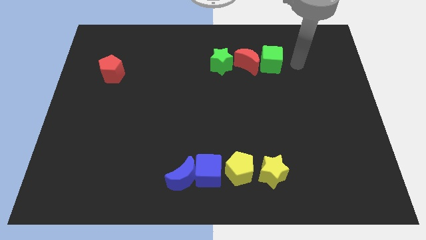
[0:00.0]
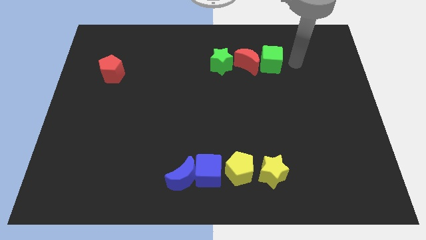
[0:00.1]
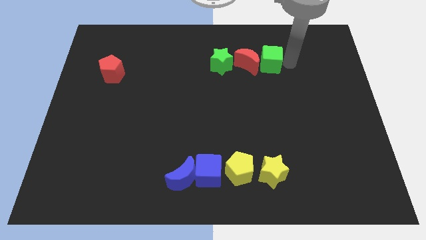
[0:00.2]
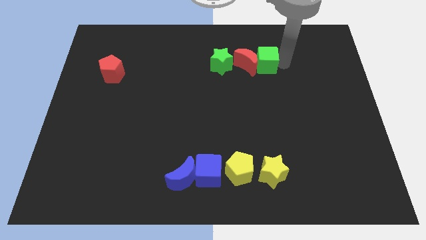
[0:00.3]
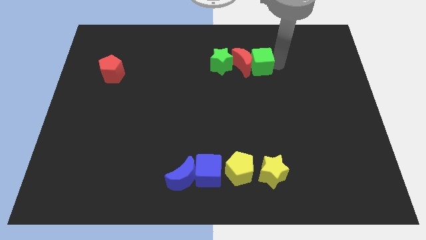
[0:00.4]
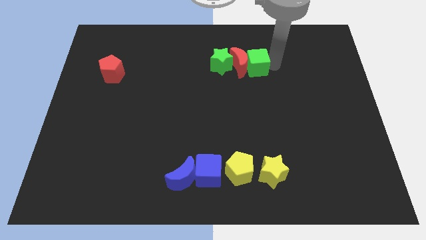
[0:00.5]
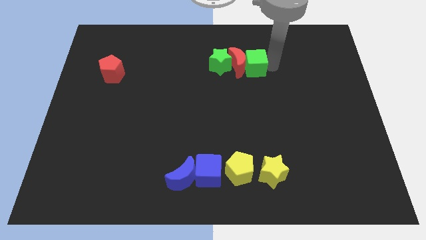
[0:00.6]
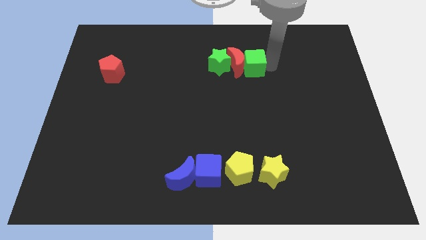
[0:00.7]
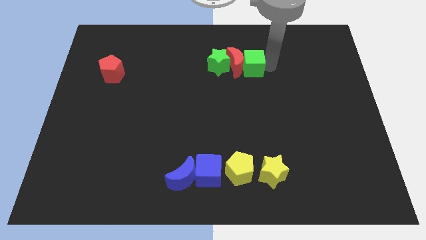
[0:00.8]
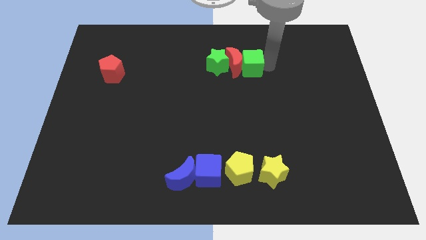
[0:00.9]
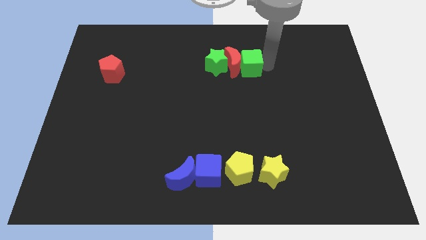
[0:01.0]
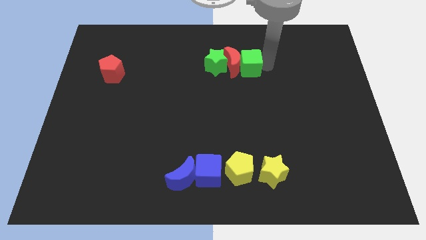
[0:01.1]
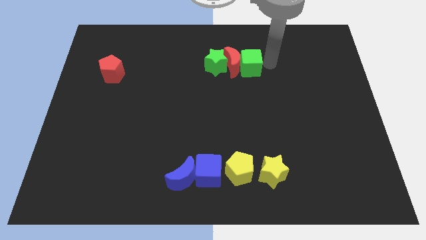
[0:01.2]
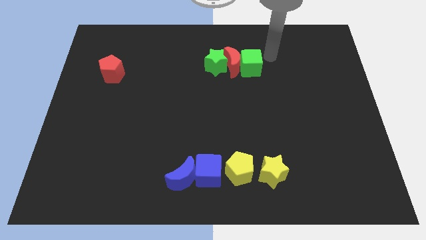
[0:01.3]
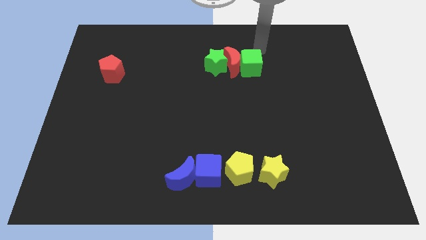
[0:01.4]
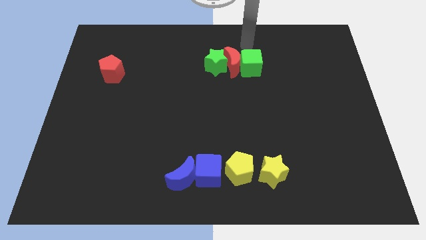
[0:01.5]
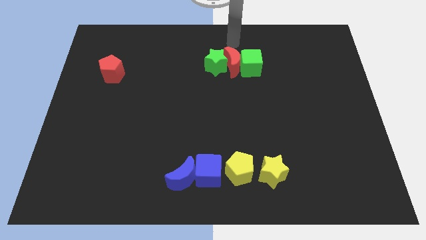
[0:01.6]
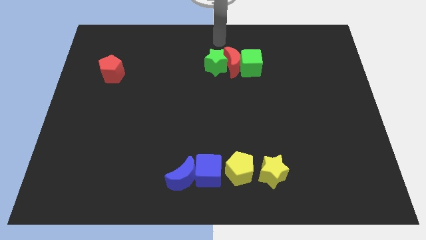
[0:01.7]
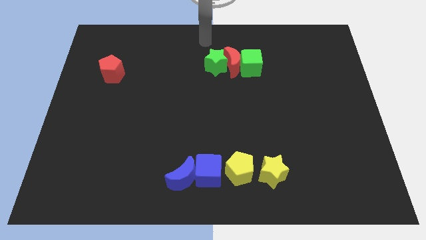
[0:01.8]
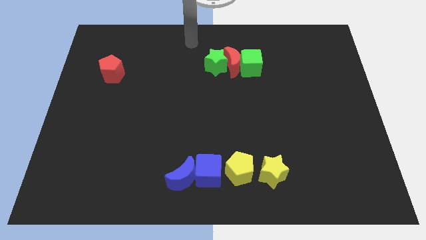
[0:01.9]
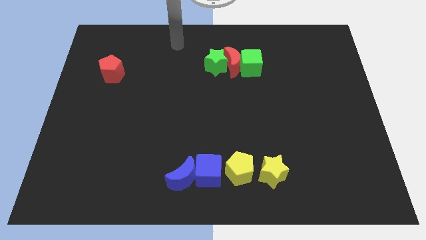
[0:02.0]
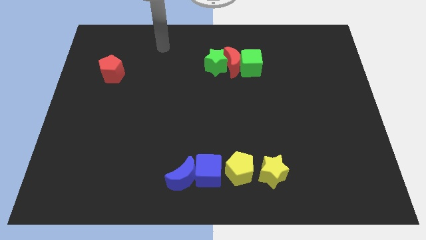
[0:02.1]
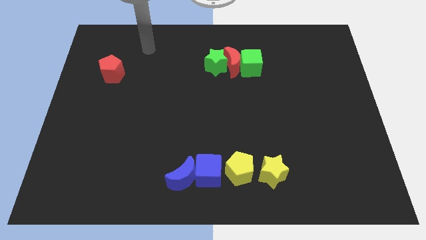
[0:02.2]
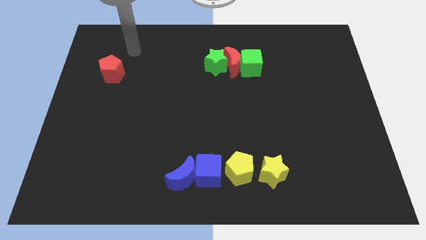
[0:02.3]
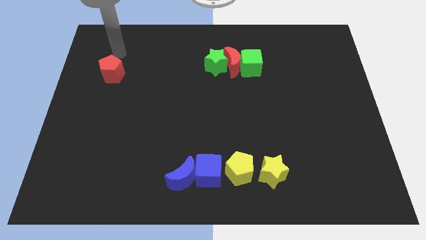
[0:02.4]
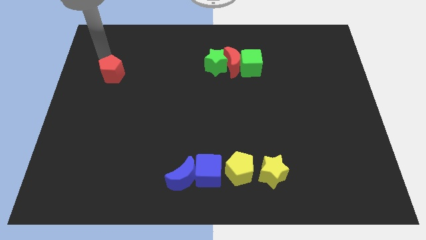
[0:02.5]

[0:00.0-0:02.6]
move the group of blocks to the top center of the board

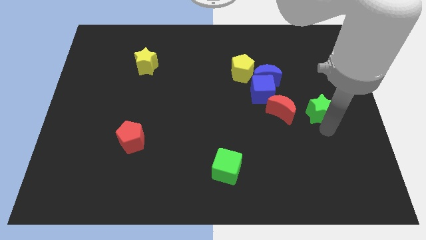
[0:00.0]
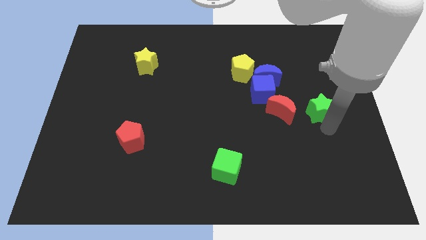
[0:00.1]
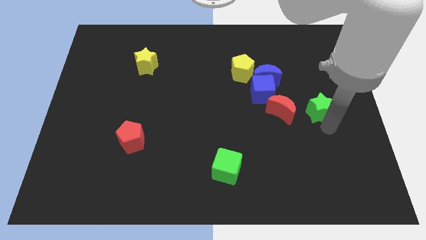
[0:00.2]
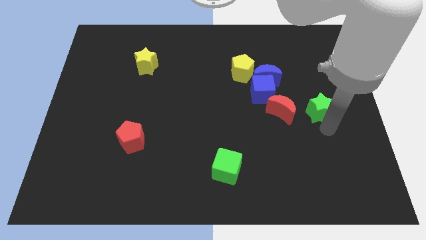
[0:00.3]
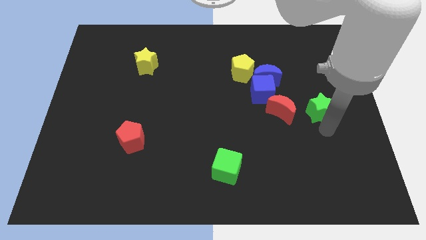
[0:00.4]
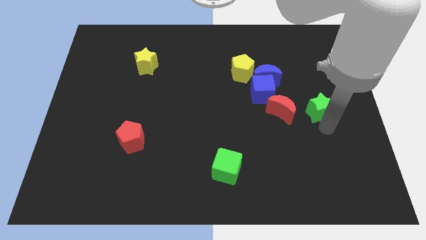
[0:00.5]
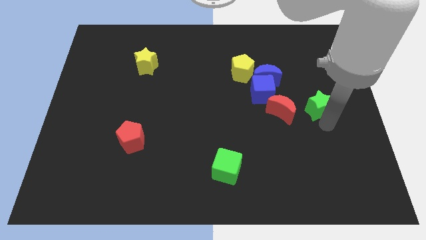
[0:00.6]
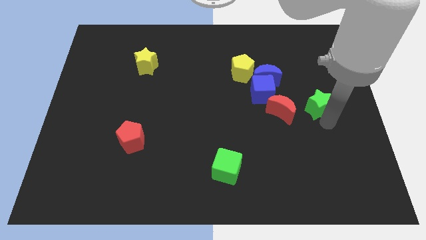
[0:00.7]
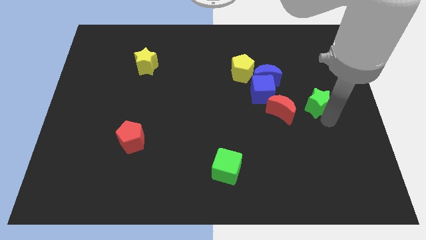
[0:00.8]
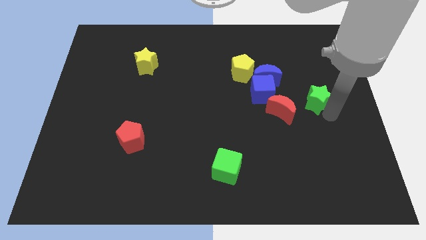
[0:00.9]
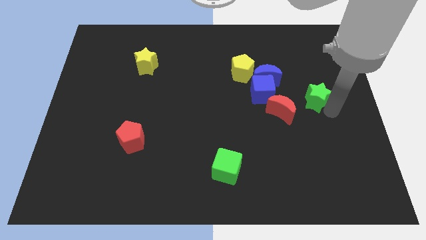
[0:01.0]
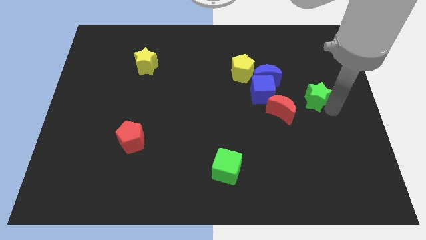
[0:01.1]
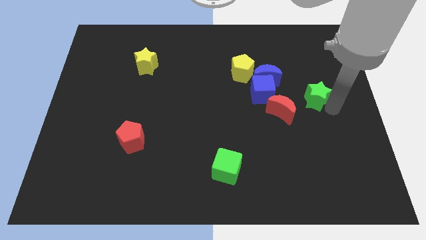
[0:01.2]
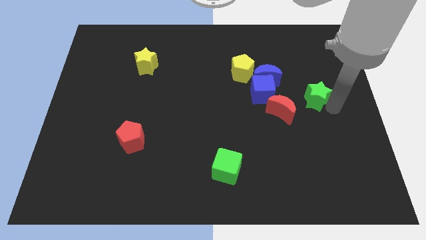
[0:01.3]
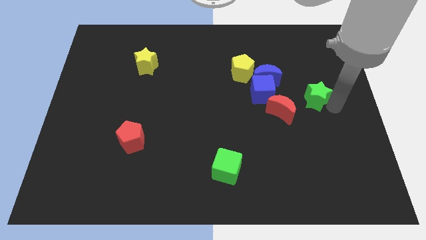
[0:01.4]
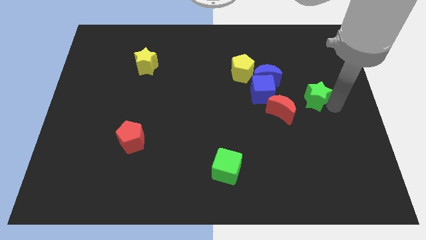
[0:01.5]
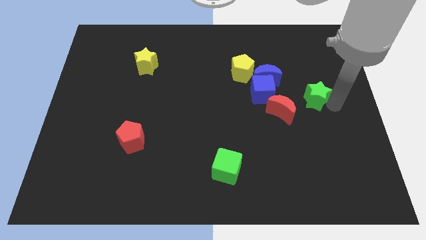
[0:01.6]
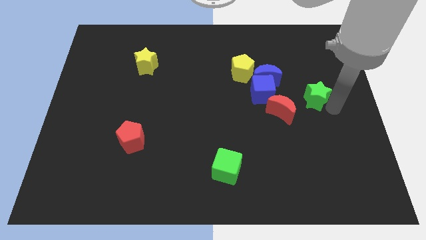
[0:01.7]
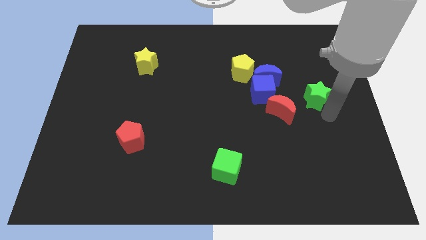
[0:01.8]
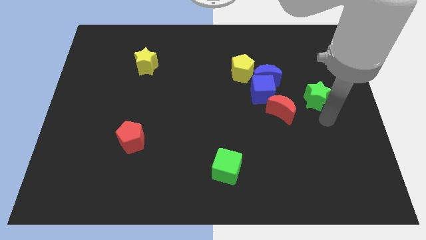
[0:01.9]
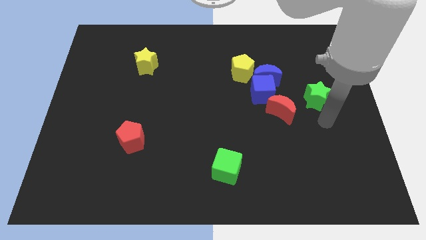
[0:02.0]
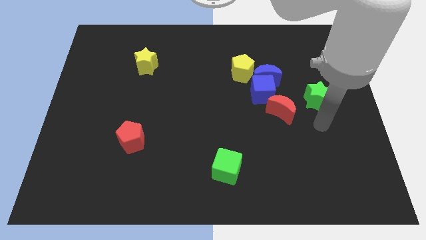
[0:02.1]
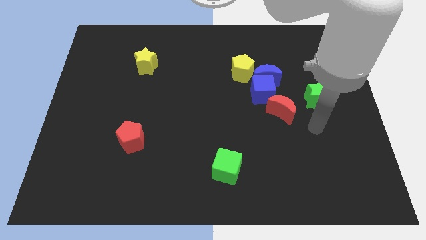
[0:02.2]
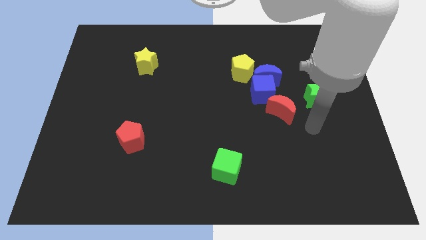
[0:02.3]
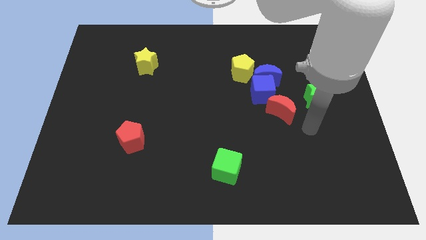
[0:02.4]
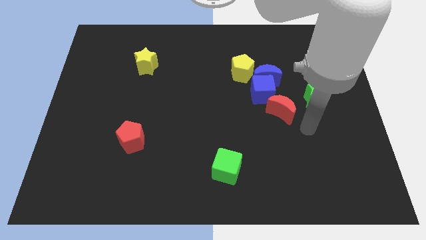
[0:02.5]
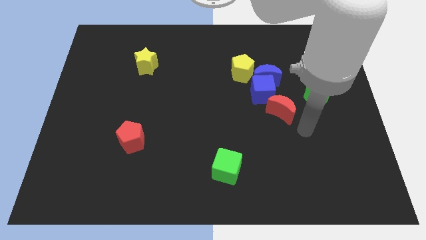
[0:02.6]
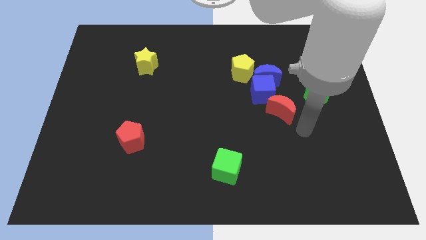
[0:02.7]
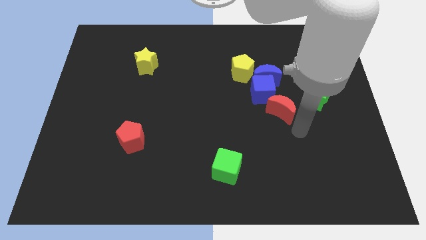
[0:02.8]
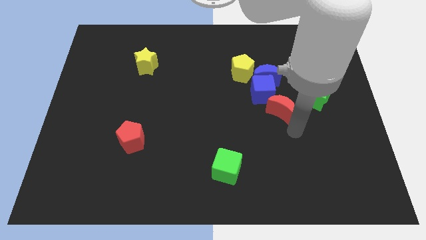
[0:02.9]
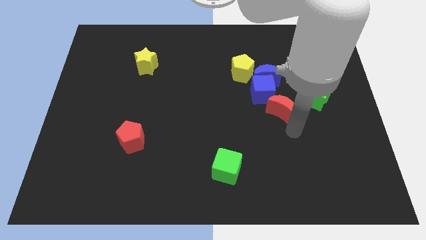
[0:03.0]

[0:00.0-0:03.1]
push the green star at the top right side of the red crescent

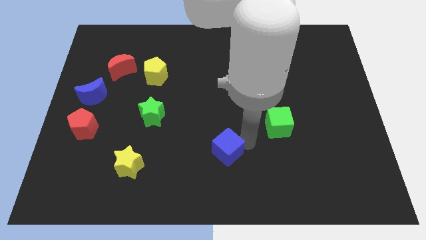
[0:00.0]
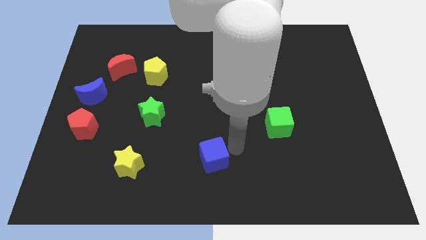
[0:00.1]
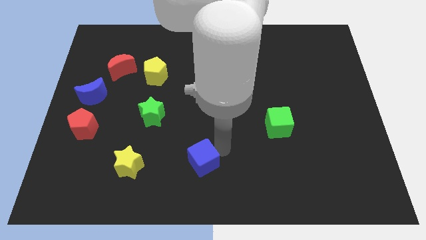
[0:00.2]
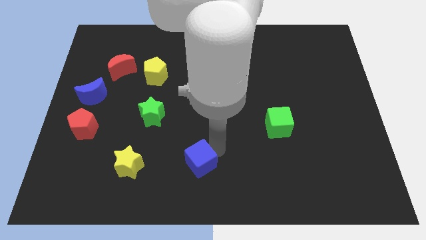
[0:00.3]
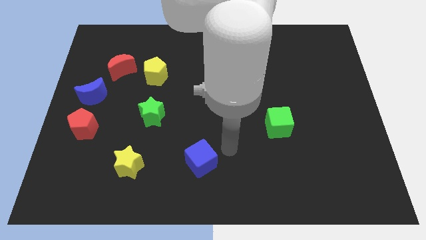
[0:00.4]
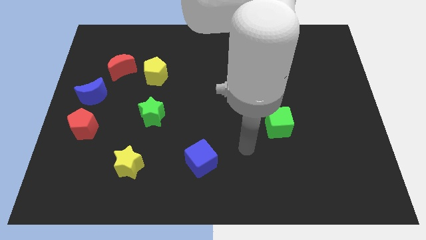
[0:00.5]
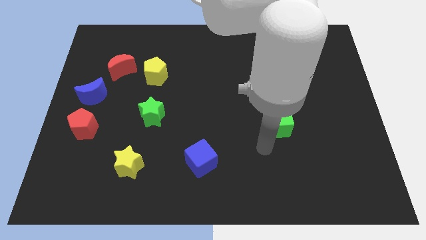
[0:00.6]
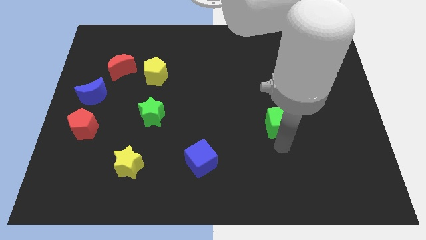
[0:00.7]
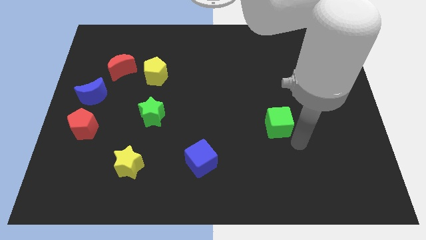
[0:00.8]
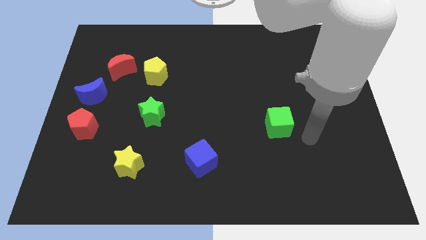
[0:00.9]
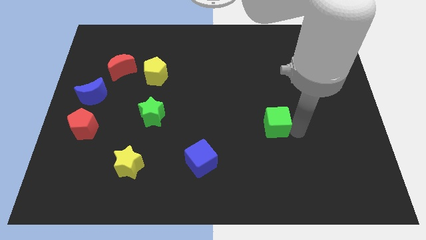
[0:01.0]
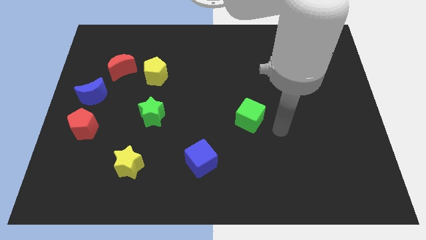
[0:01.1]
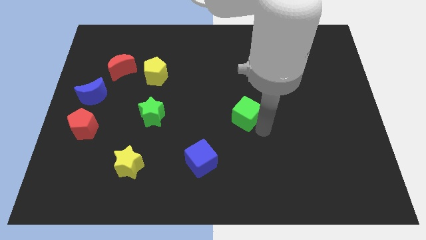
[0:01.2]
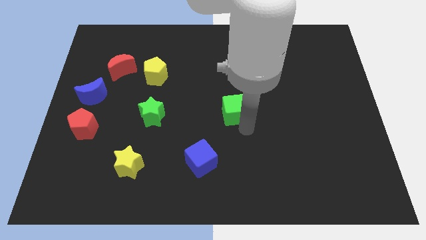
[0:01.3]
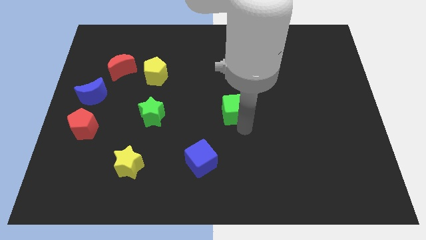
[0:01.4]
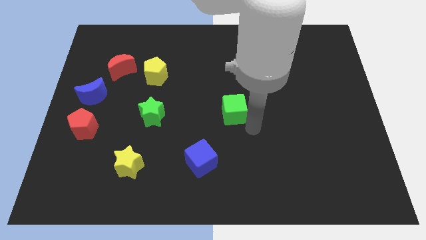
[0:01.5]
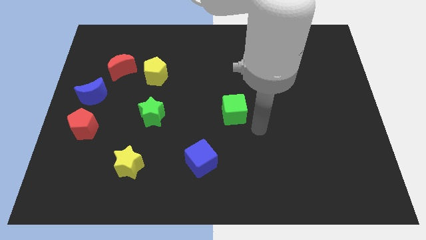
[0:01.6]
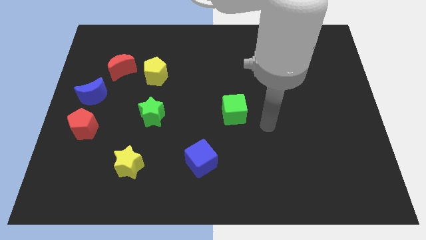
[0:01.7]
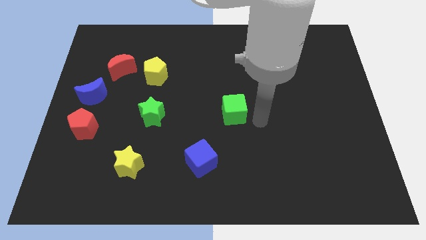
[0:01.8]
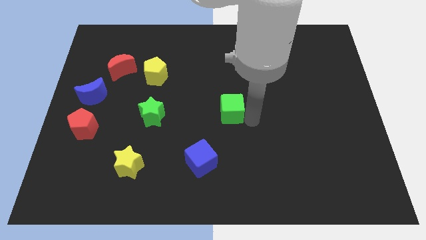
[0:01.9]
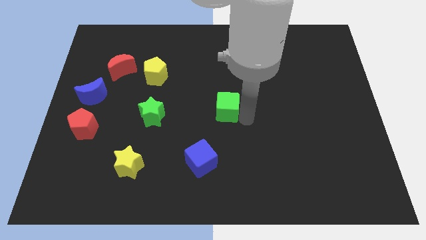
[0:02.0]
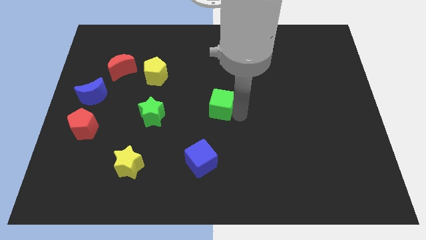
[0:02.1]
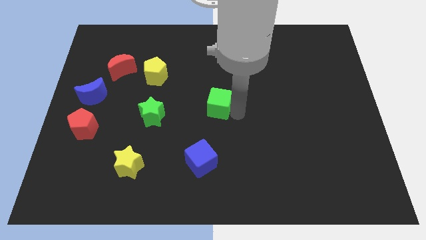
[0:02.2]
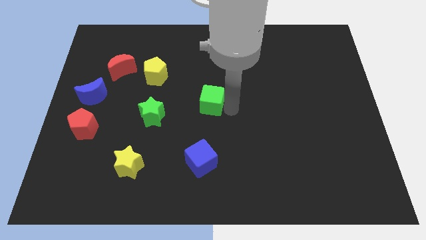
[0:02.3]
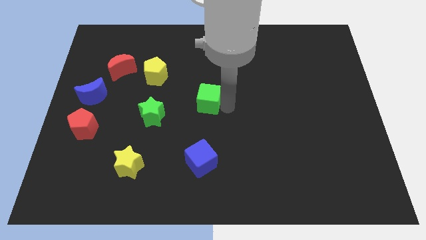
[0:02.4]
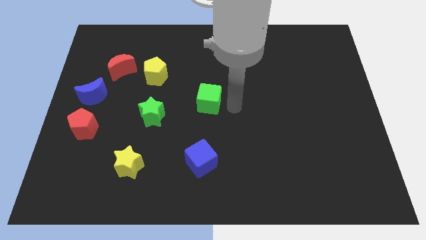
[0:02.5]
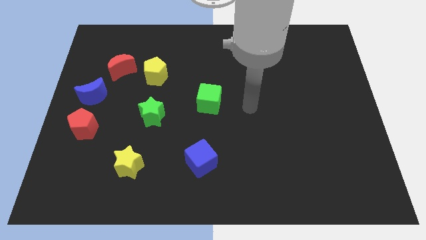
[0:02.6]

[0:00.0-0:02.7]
move the blue and the green cubes slightly to the left

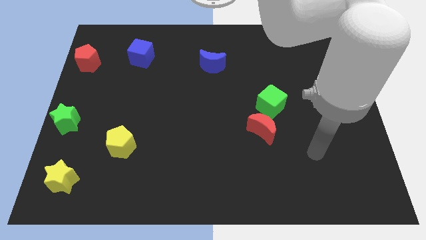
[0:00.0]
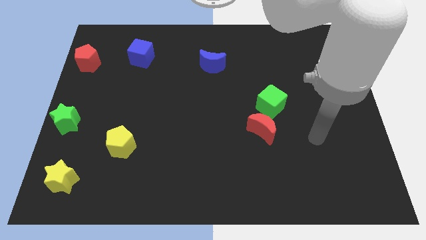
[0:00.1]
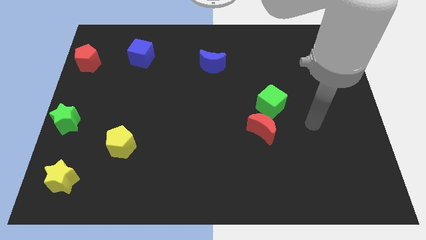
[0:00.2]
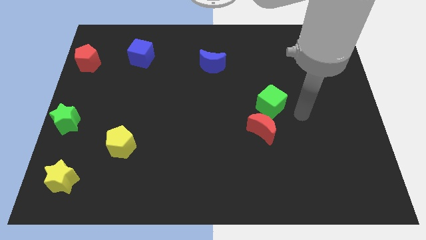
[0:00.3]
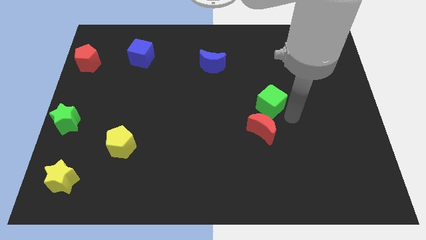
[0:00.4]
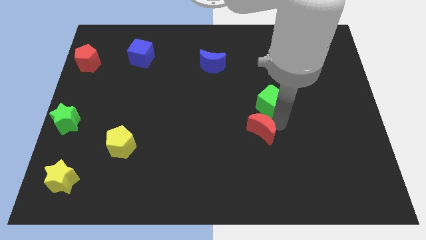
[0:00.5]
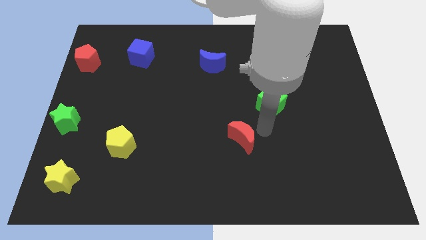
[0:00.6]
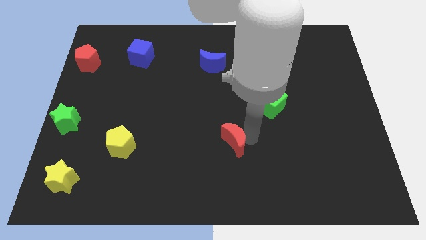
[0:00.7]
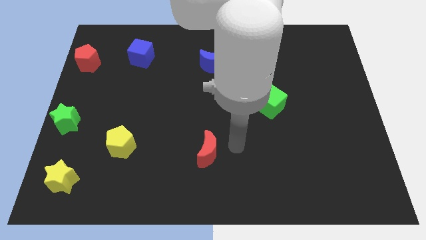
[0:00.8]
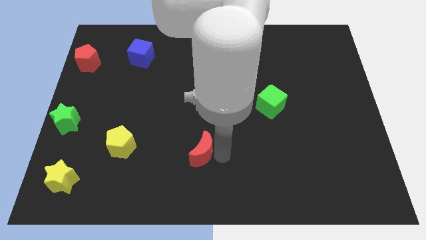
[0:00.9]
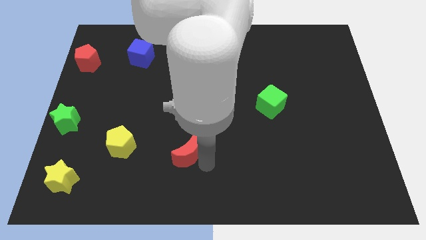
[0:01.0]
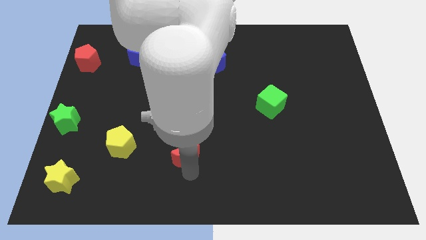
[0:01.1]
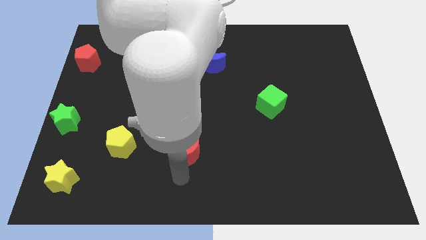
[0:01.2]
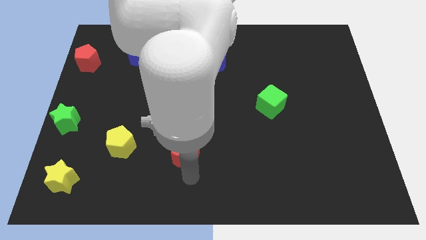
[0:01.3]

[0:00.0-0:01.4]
push the red crescent to the right of the yellow pentagon
